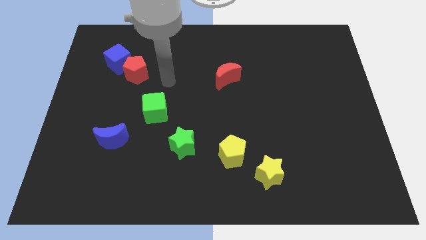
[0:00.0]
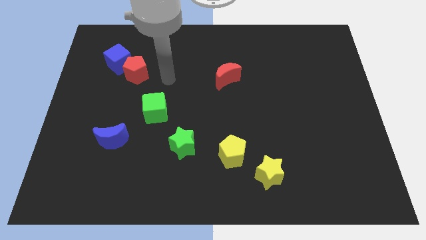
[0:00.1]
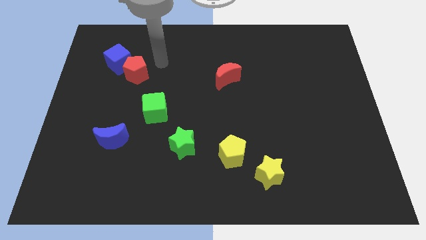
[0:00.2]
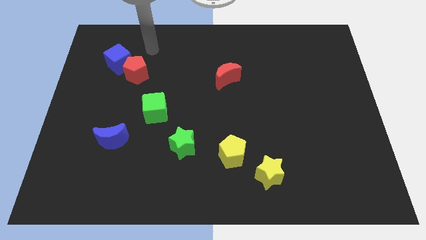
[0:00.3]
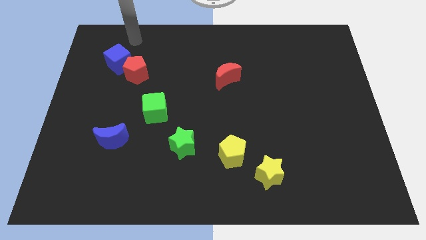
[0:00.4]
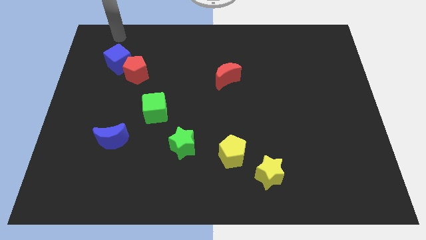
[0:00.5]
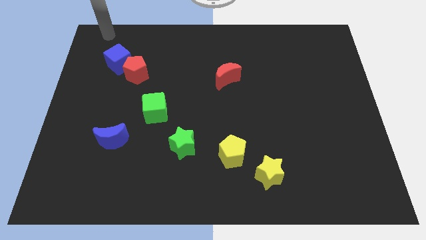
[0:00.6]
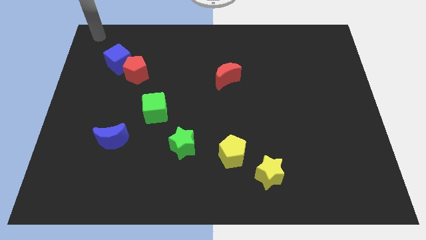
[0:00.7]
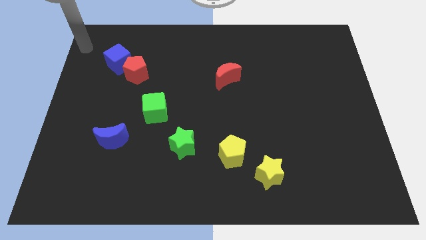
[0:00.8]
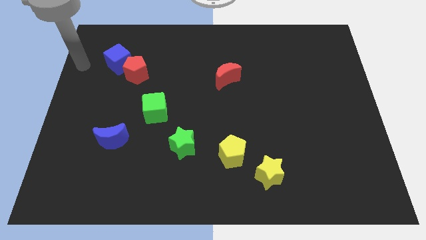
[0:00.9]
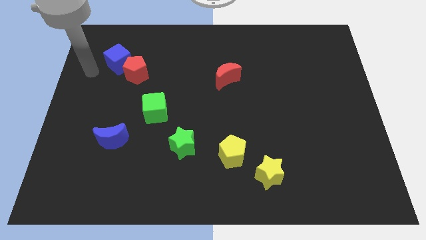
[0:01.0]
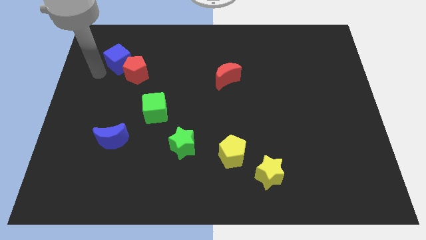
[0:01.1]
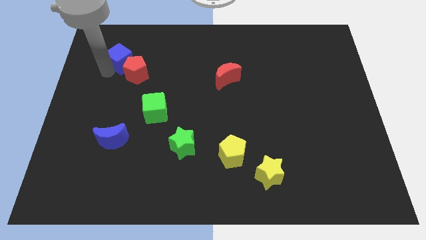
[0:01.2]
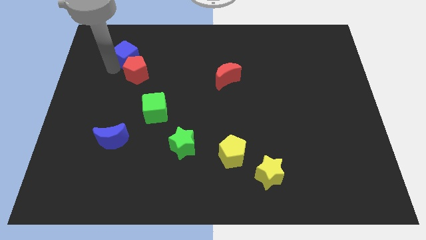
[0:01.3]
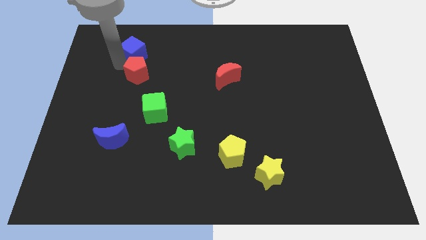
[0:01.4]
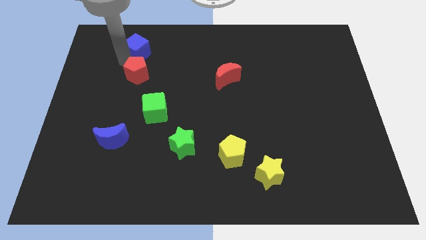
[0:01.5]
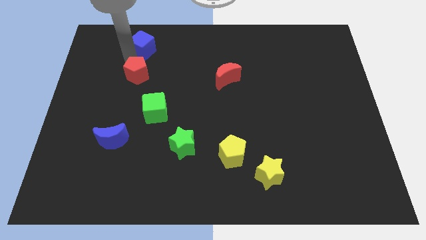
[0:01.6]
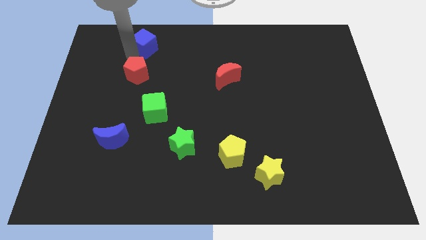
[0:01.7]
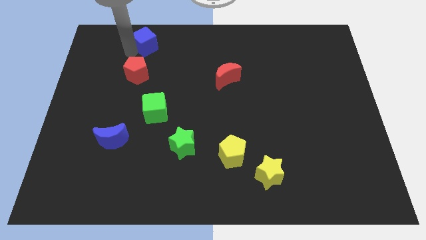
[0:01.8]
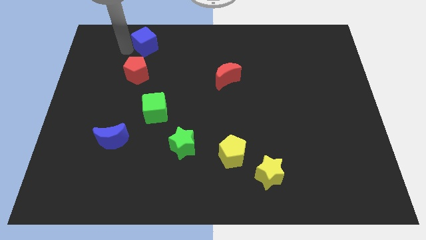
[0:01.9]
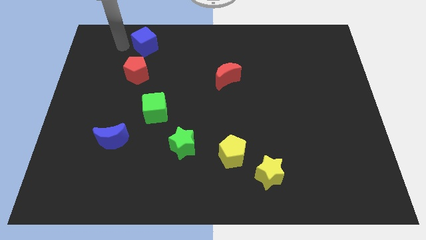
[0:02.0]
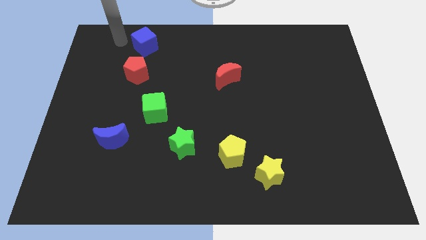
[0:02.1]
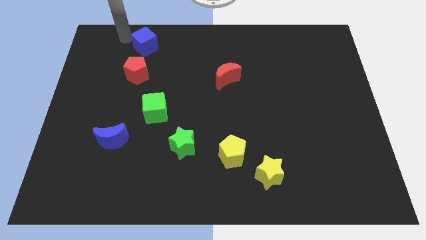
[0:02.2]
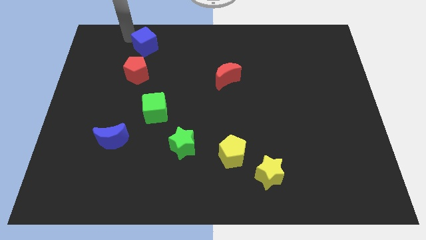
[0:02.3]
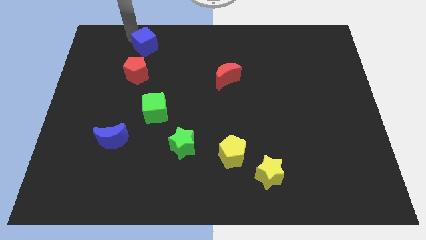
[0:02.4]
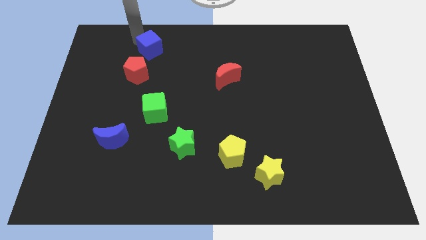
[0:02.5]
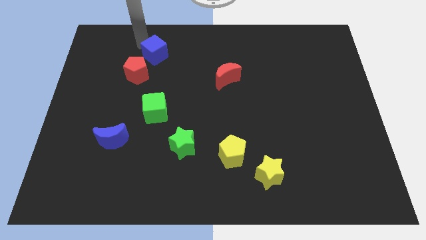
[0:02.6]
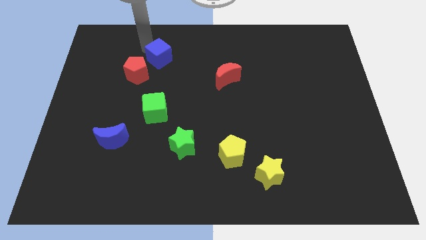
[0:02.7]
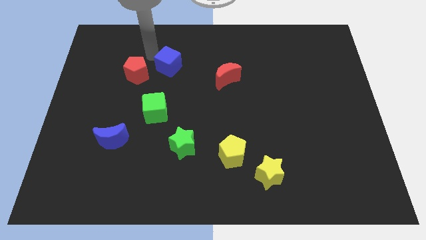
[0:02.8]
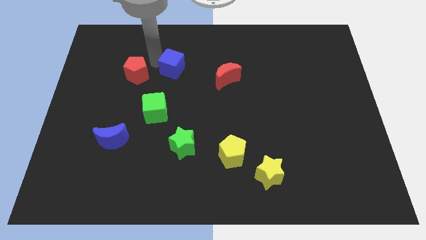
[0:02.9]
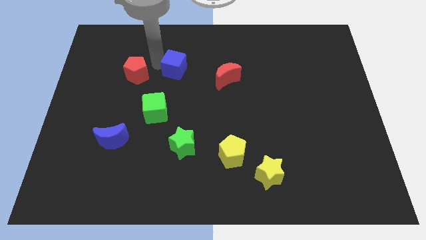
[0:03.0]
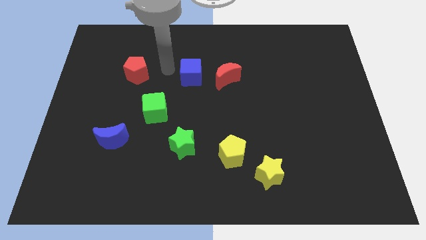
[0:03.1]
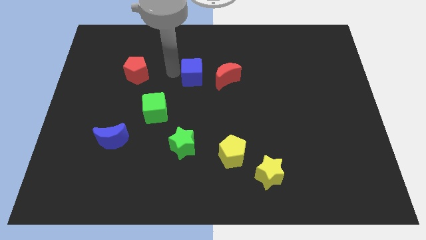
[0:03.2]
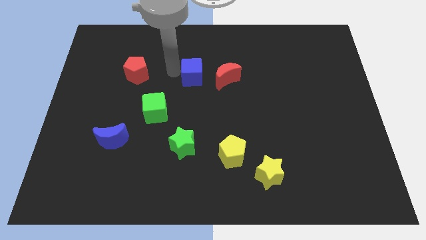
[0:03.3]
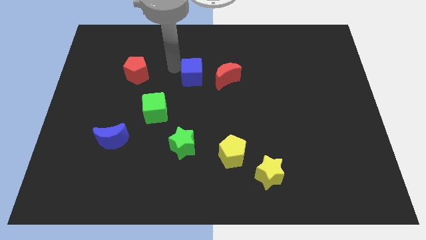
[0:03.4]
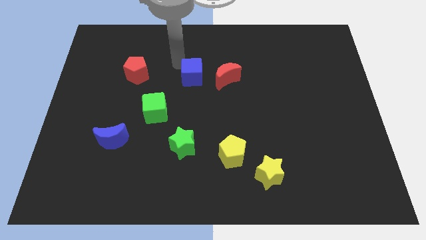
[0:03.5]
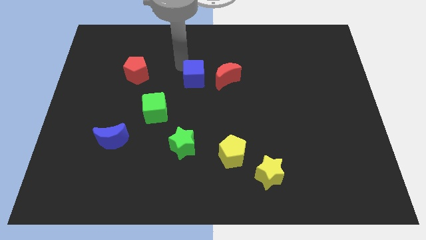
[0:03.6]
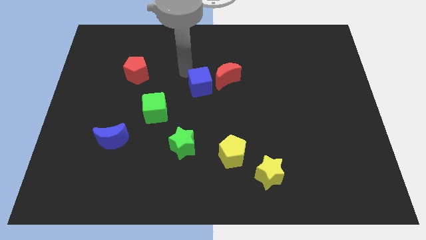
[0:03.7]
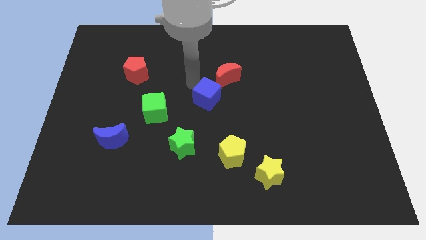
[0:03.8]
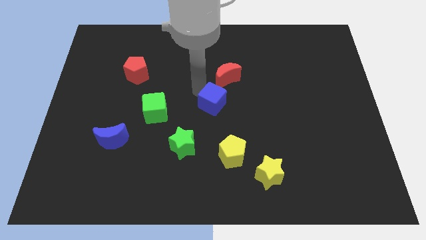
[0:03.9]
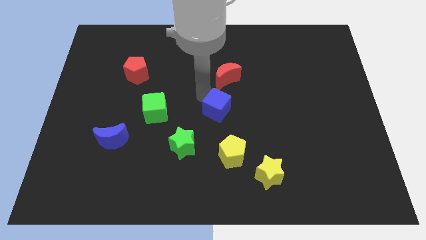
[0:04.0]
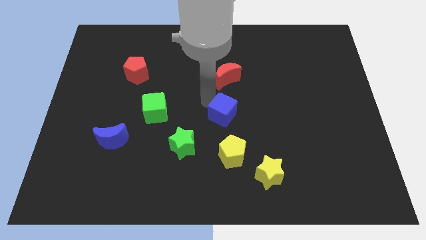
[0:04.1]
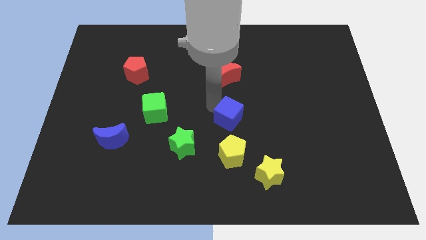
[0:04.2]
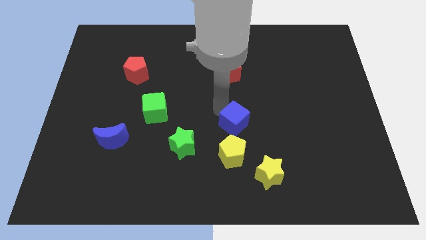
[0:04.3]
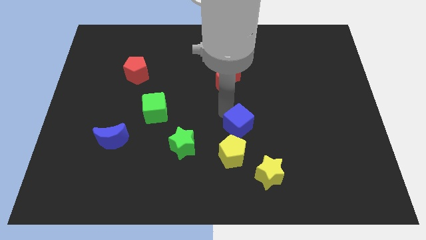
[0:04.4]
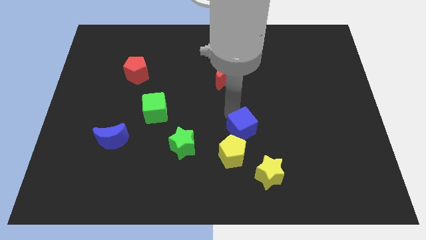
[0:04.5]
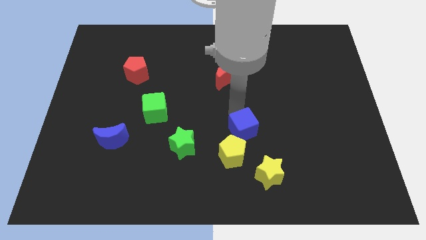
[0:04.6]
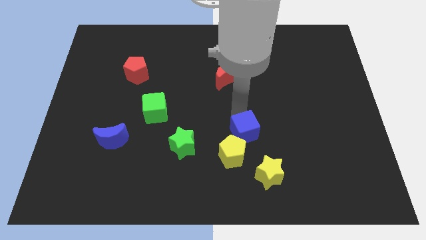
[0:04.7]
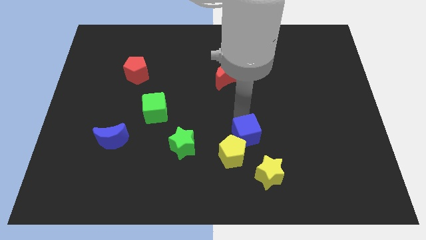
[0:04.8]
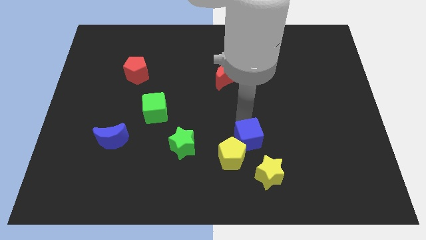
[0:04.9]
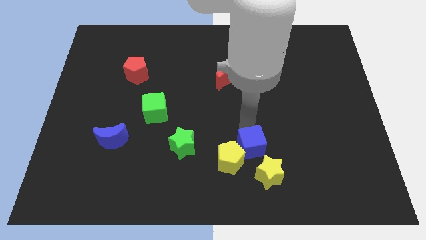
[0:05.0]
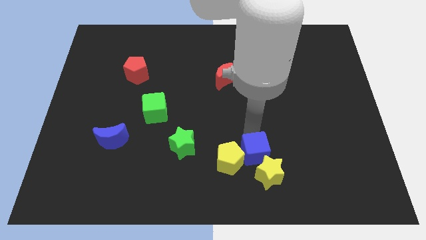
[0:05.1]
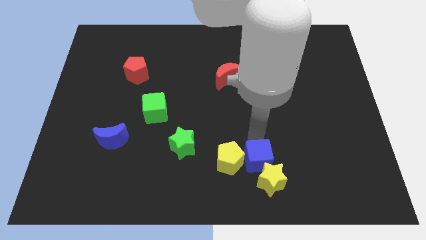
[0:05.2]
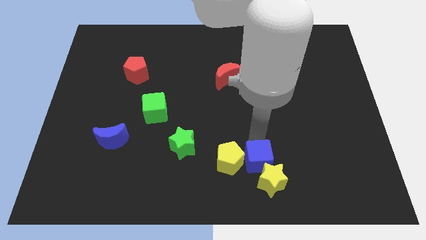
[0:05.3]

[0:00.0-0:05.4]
move the blue cube next to the yellow star

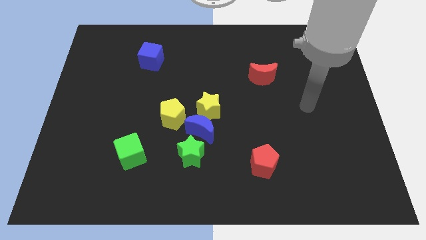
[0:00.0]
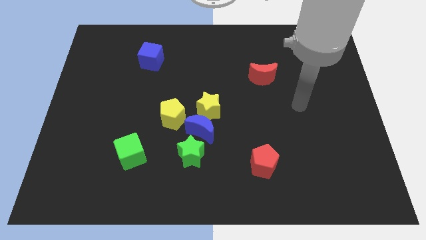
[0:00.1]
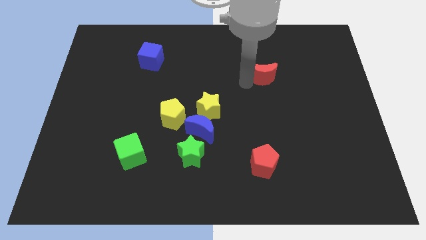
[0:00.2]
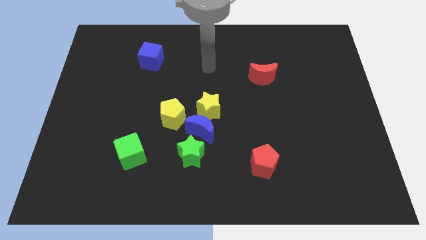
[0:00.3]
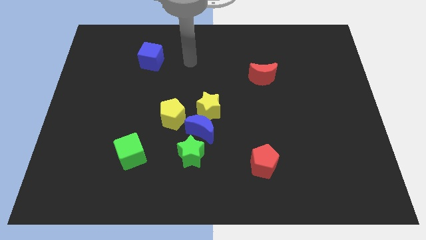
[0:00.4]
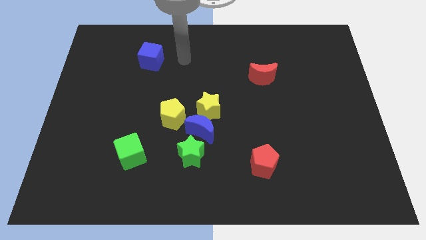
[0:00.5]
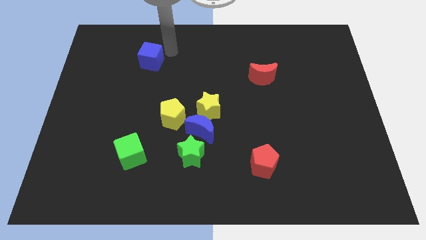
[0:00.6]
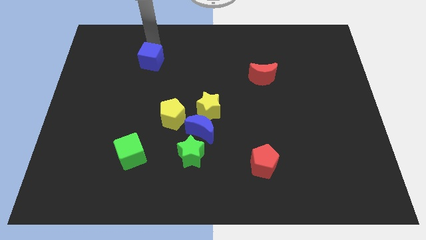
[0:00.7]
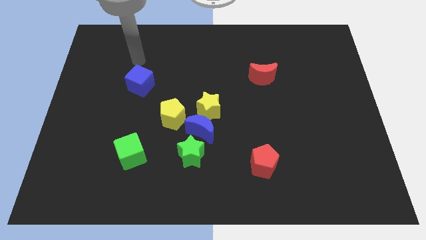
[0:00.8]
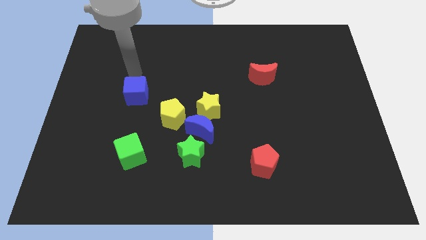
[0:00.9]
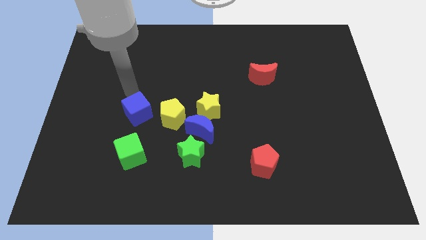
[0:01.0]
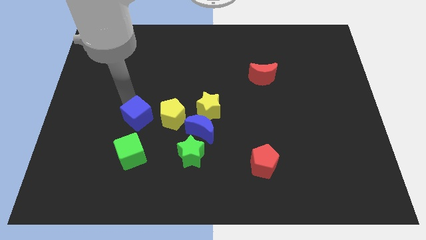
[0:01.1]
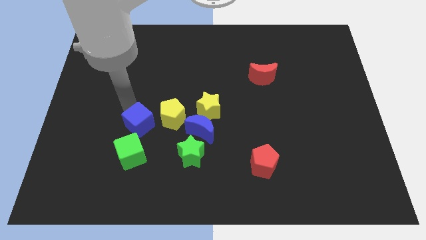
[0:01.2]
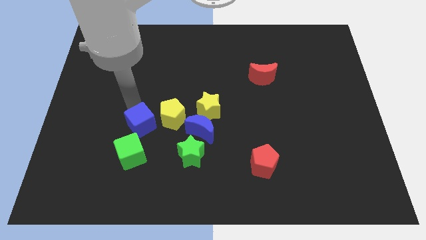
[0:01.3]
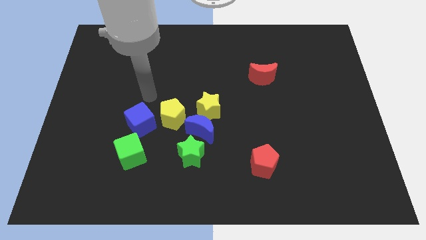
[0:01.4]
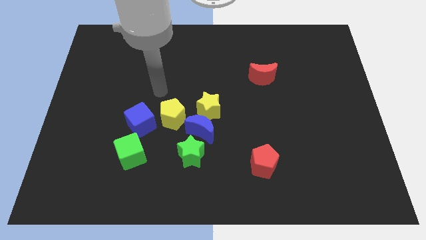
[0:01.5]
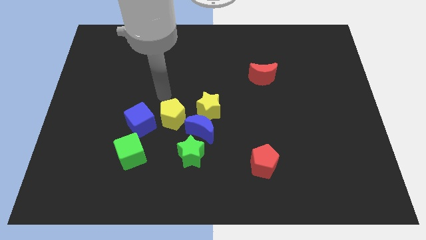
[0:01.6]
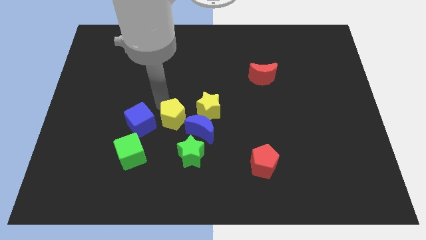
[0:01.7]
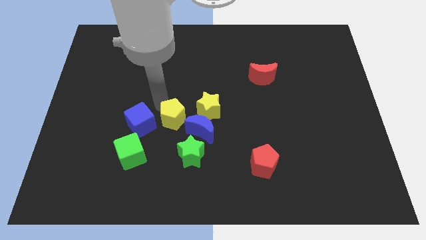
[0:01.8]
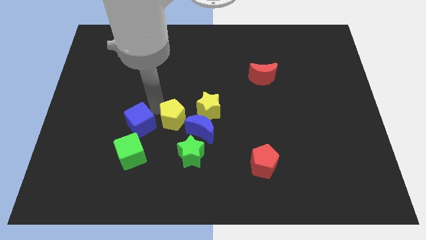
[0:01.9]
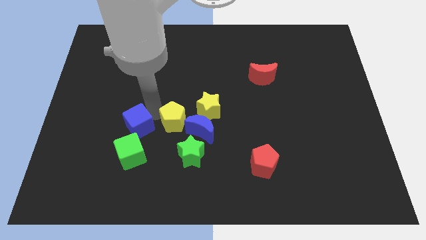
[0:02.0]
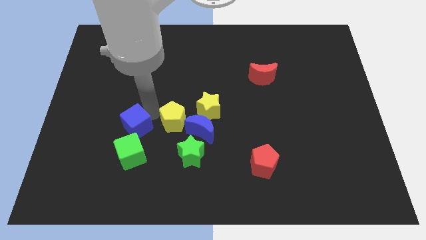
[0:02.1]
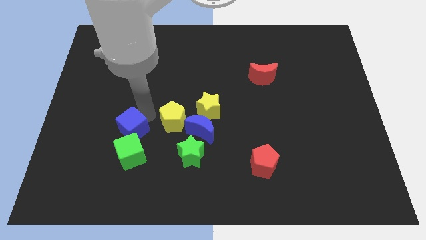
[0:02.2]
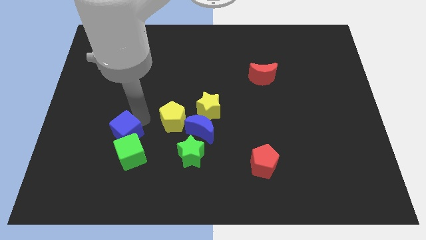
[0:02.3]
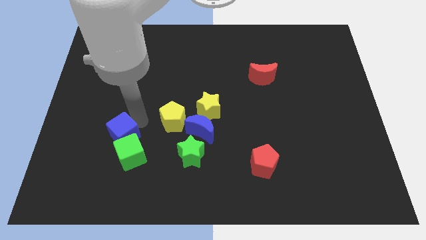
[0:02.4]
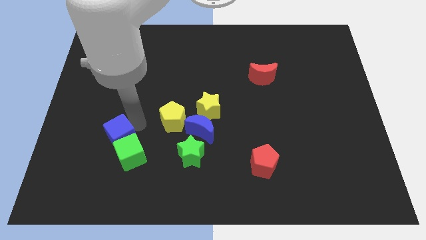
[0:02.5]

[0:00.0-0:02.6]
put the blue cube close to the green cube

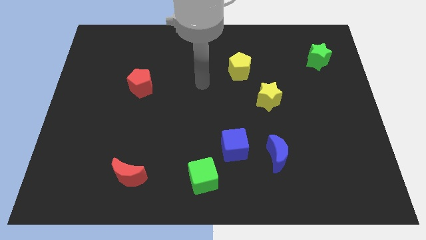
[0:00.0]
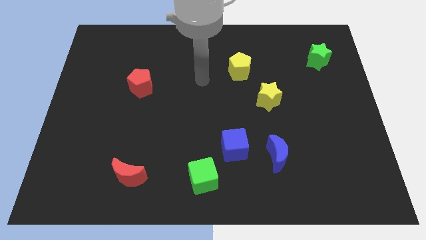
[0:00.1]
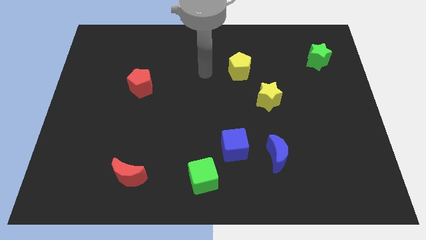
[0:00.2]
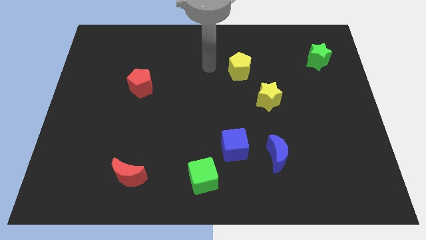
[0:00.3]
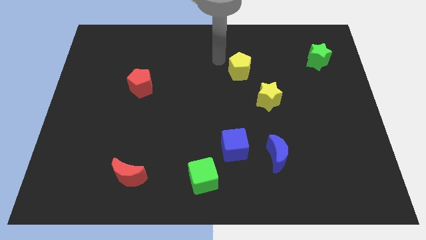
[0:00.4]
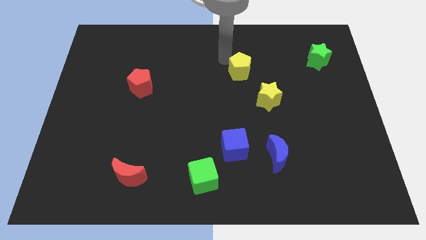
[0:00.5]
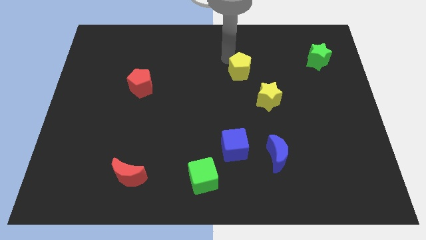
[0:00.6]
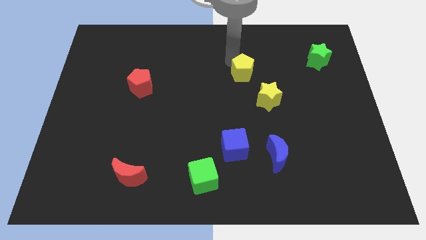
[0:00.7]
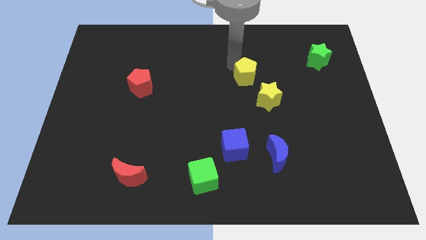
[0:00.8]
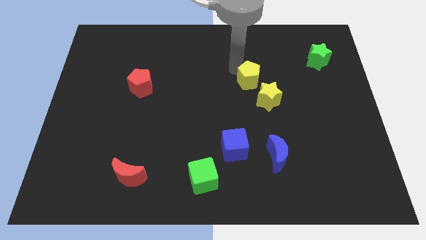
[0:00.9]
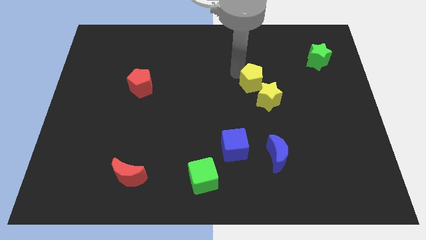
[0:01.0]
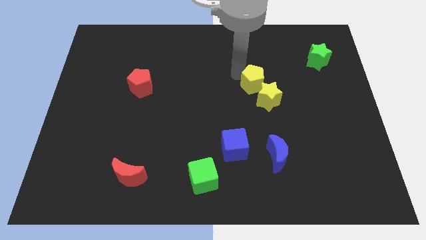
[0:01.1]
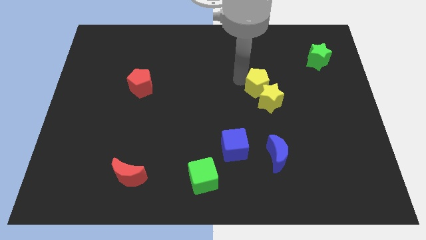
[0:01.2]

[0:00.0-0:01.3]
push the yellow pentagon to the yellow star
